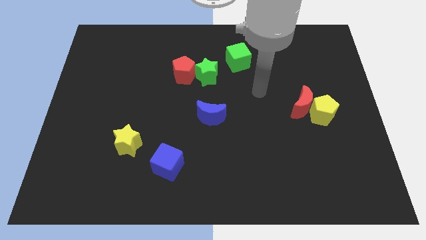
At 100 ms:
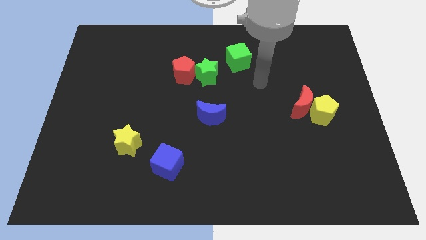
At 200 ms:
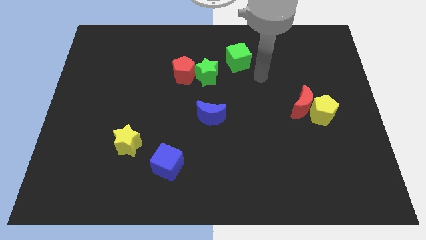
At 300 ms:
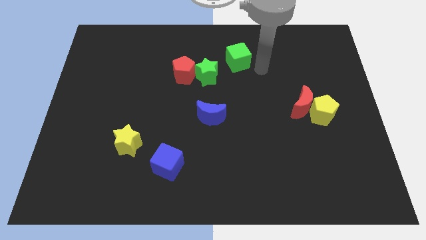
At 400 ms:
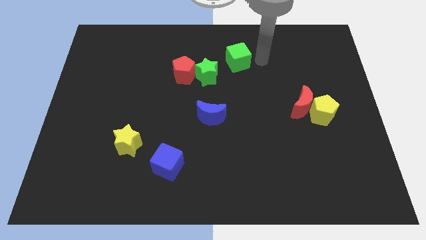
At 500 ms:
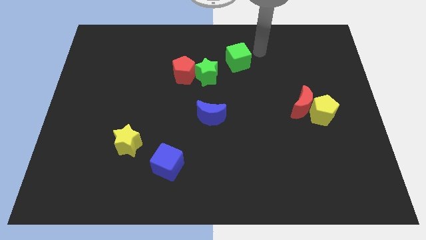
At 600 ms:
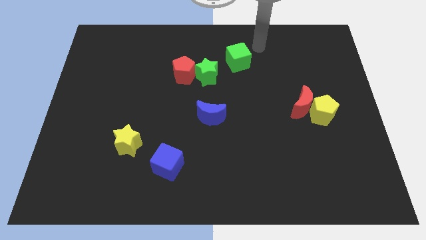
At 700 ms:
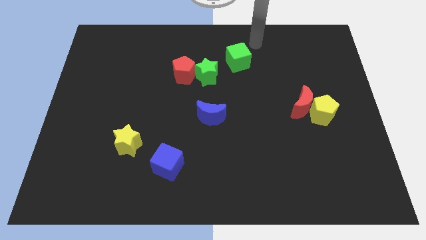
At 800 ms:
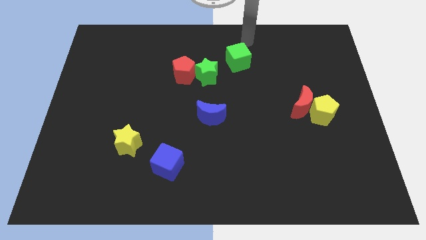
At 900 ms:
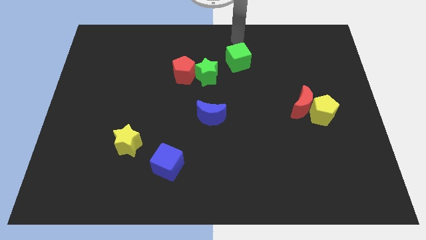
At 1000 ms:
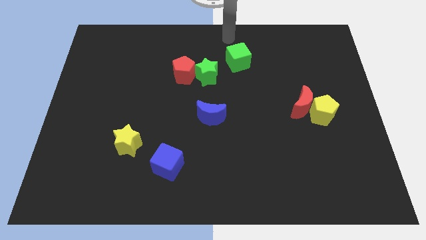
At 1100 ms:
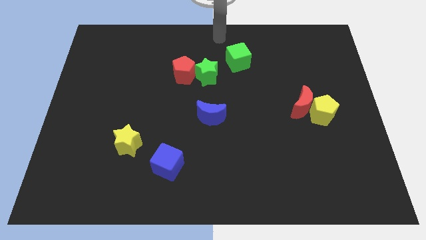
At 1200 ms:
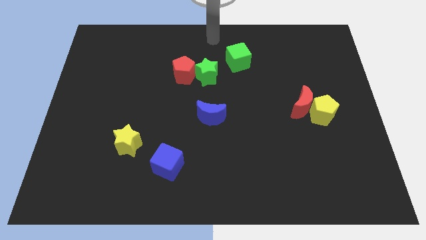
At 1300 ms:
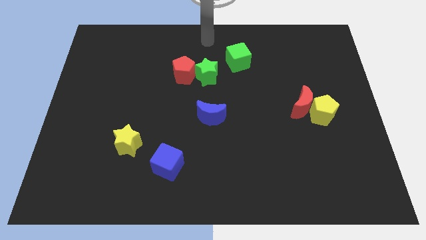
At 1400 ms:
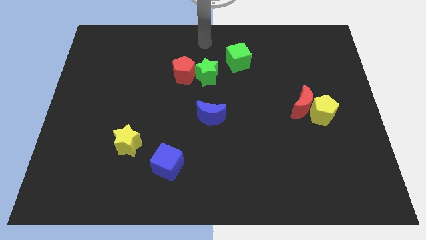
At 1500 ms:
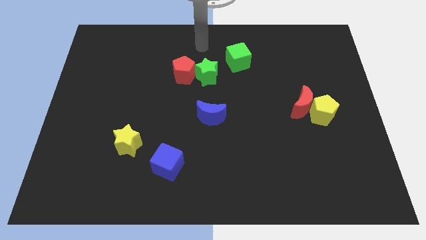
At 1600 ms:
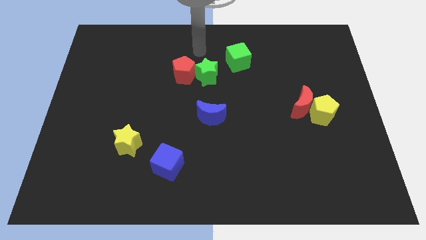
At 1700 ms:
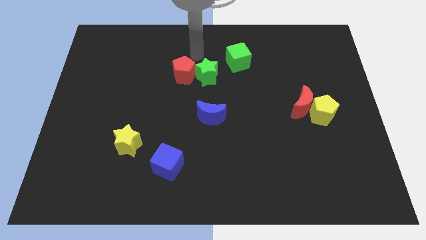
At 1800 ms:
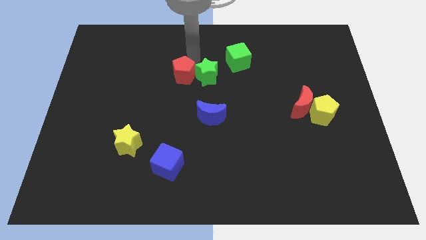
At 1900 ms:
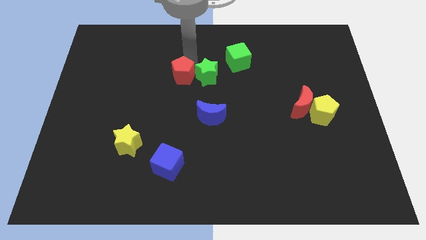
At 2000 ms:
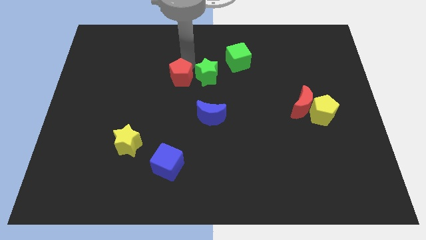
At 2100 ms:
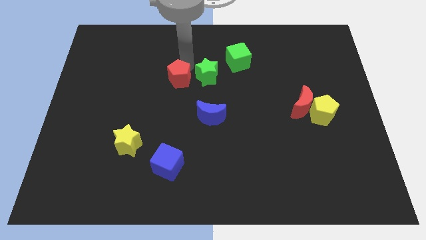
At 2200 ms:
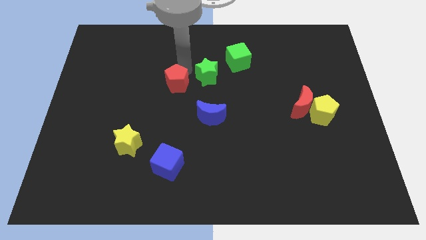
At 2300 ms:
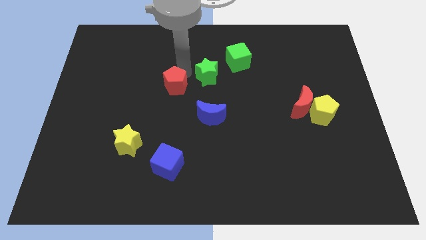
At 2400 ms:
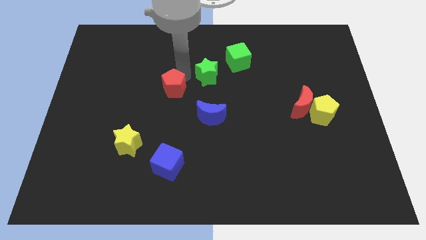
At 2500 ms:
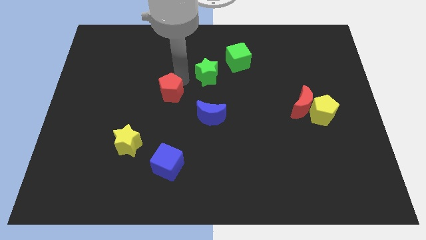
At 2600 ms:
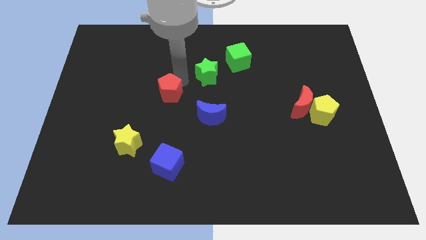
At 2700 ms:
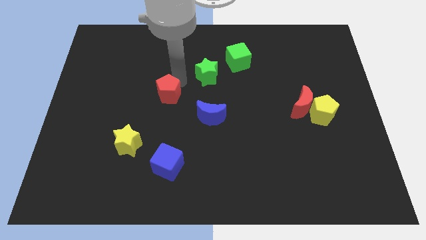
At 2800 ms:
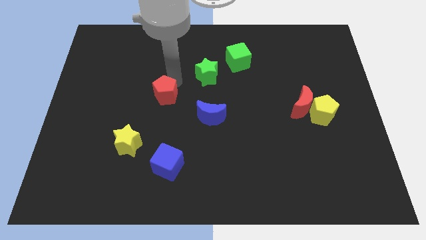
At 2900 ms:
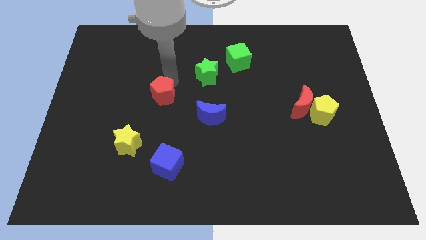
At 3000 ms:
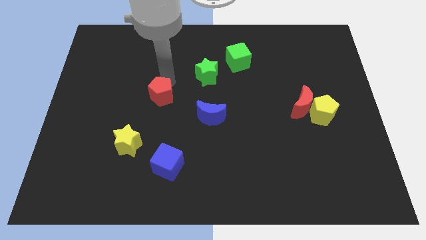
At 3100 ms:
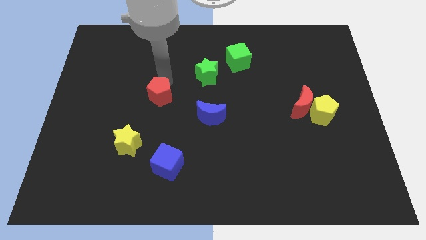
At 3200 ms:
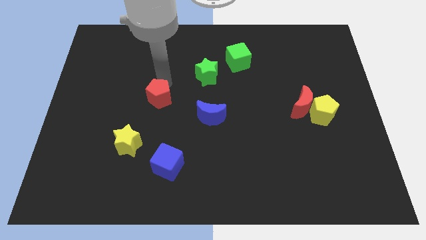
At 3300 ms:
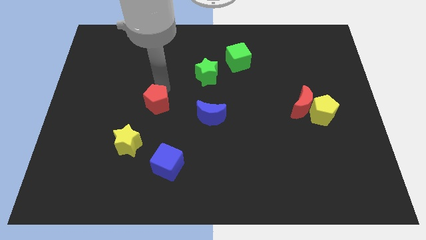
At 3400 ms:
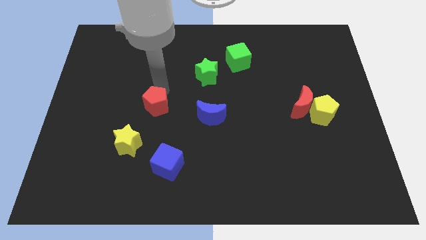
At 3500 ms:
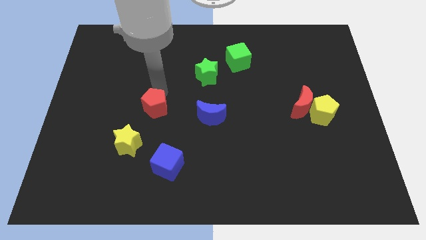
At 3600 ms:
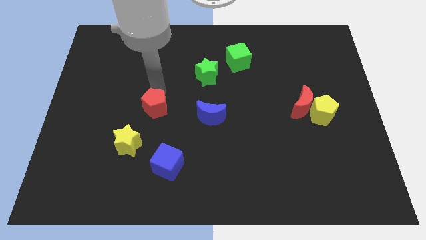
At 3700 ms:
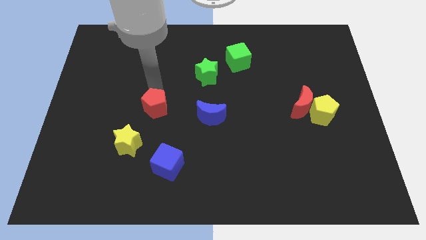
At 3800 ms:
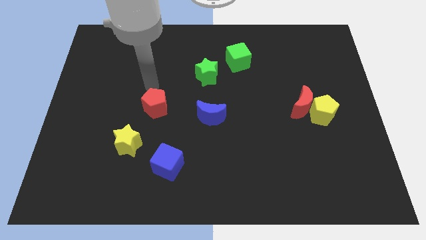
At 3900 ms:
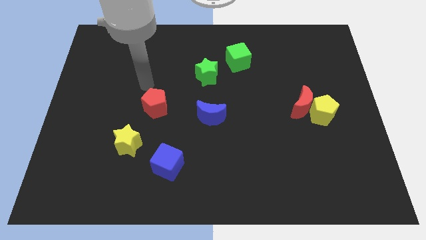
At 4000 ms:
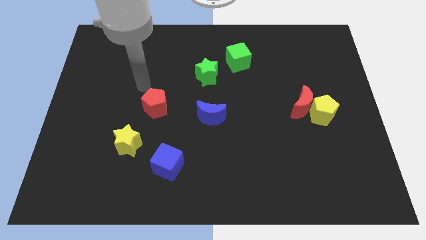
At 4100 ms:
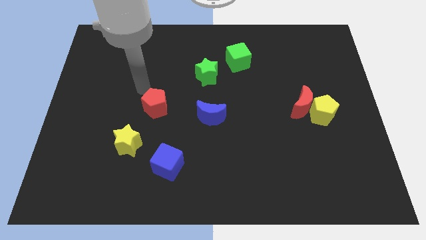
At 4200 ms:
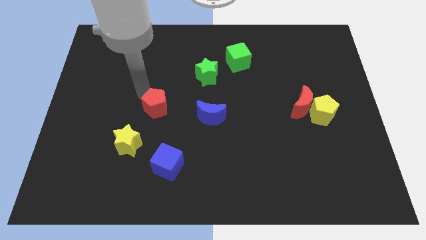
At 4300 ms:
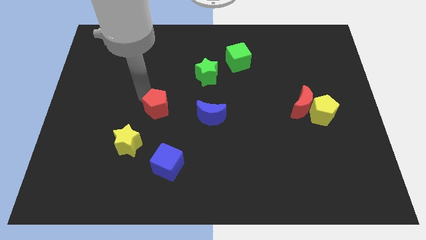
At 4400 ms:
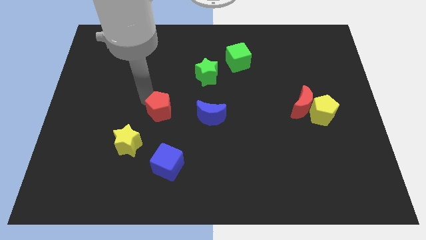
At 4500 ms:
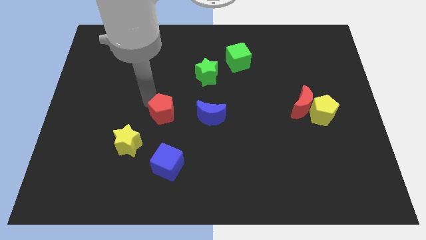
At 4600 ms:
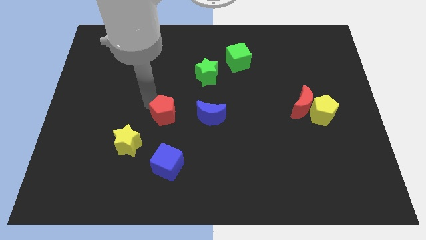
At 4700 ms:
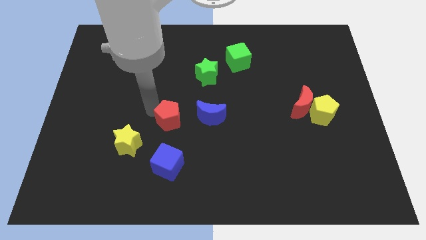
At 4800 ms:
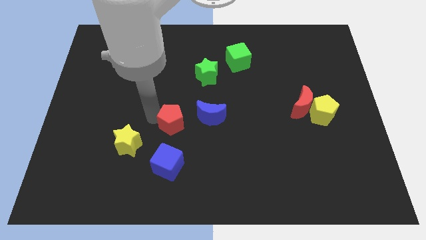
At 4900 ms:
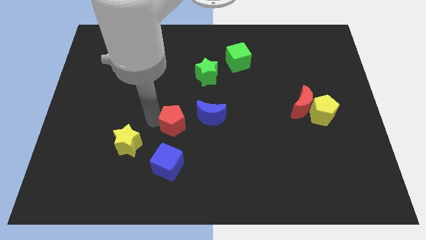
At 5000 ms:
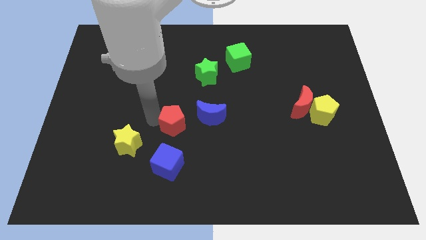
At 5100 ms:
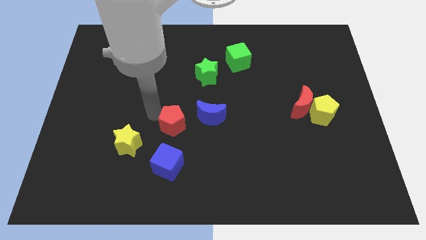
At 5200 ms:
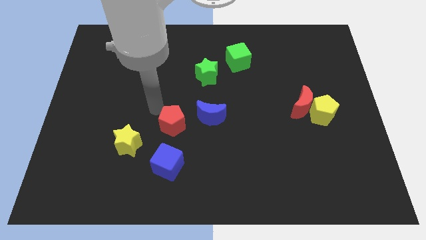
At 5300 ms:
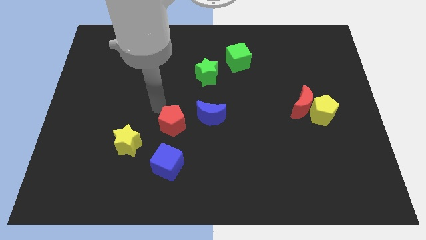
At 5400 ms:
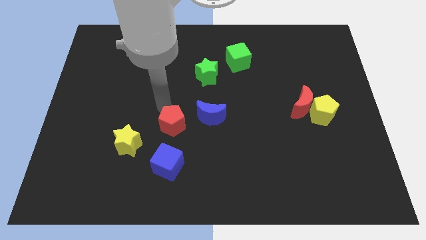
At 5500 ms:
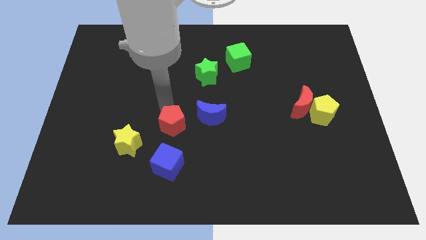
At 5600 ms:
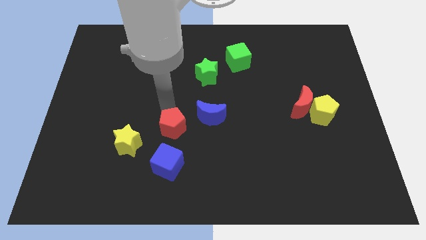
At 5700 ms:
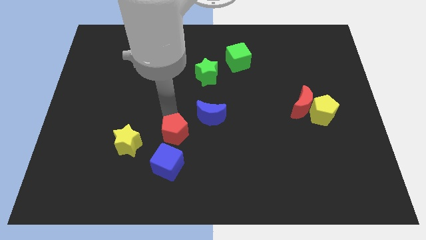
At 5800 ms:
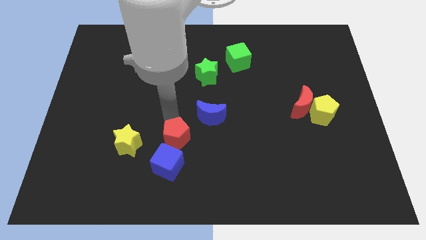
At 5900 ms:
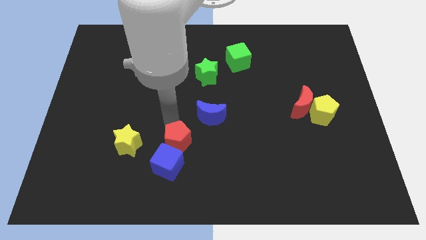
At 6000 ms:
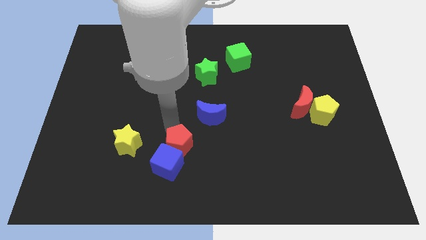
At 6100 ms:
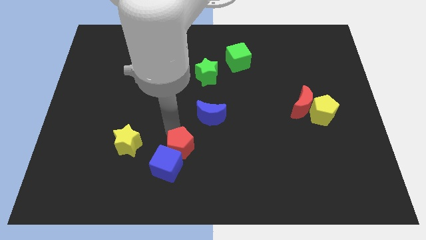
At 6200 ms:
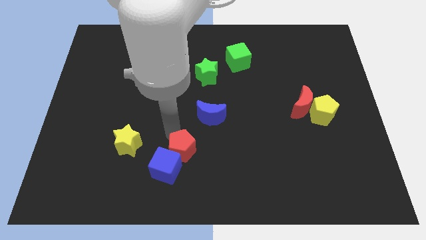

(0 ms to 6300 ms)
move the red pentagon close to the blue cube

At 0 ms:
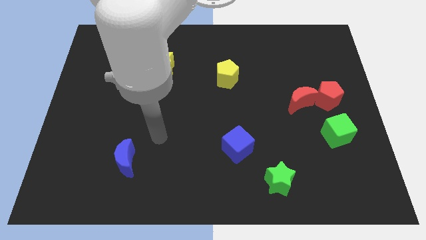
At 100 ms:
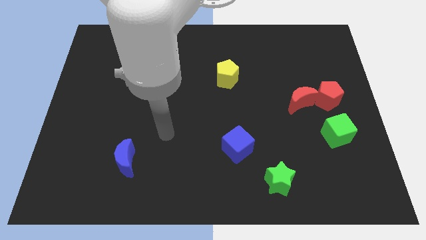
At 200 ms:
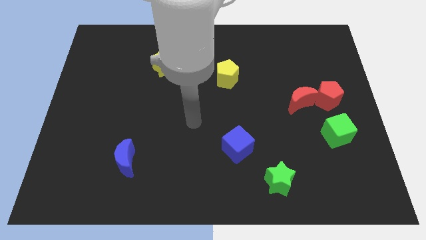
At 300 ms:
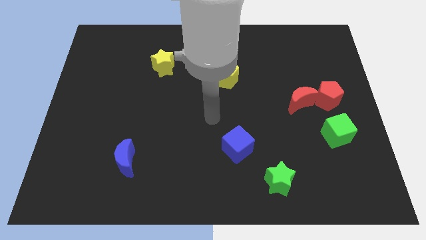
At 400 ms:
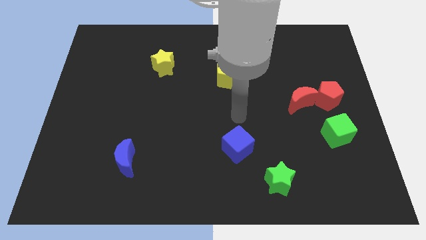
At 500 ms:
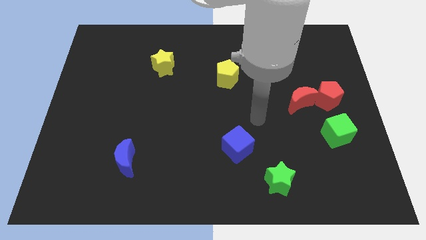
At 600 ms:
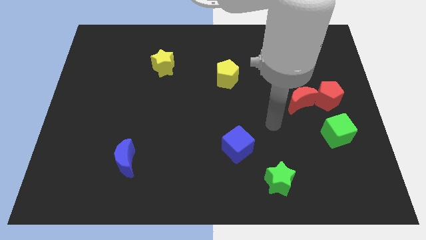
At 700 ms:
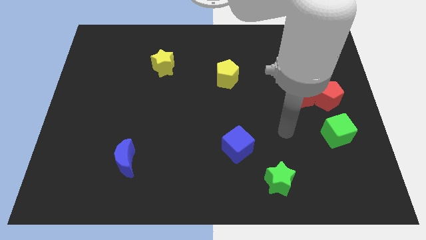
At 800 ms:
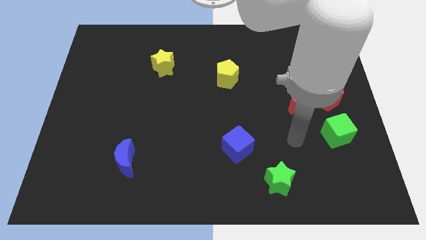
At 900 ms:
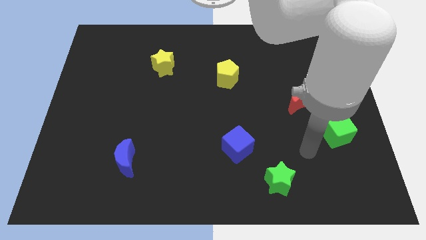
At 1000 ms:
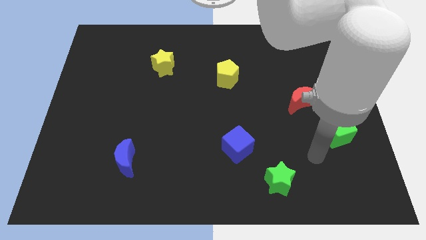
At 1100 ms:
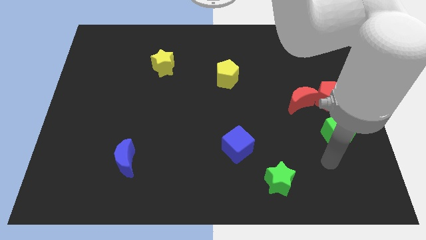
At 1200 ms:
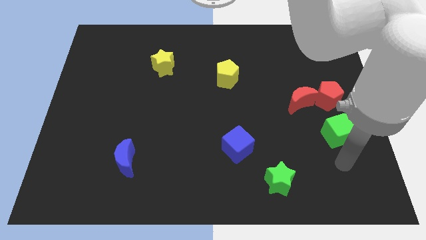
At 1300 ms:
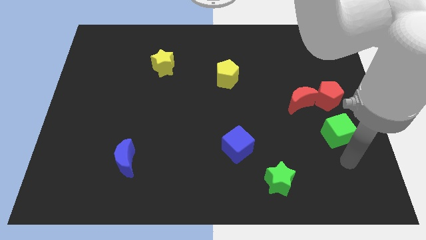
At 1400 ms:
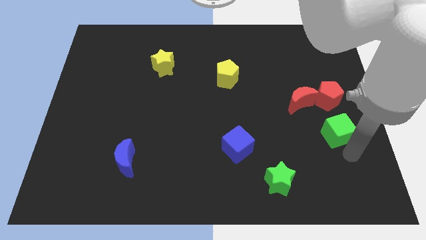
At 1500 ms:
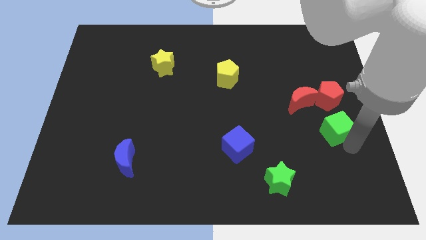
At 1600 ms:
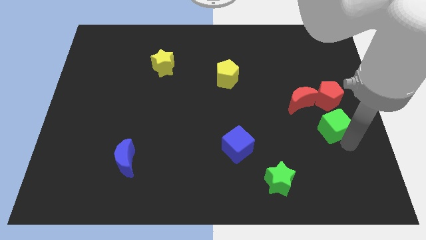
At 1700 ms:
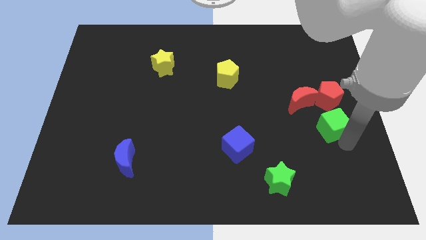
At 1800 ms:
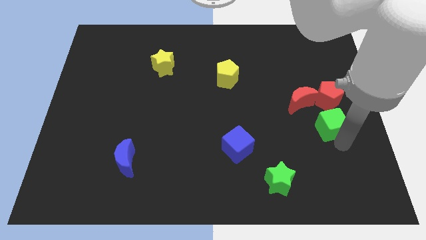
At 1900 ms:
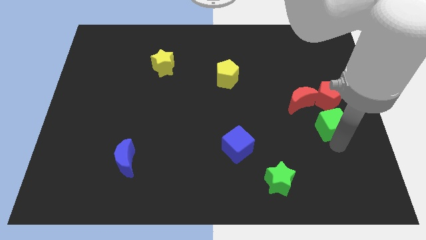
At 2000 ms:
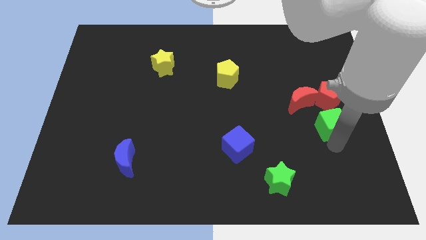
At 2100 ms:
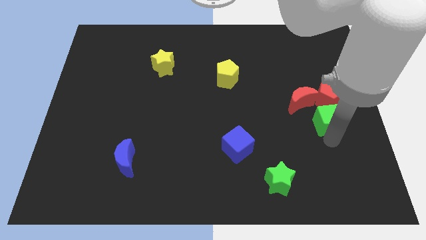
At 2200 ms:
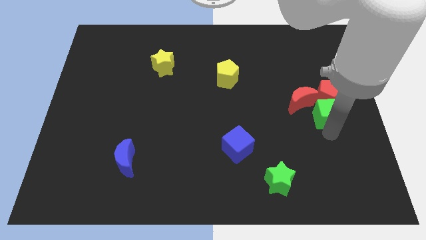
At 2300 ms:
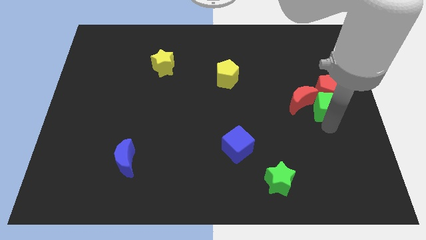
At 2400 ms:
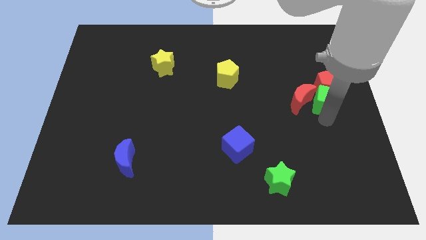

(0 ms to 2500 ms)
put the green cube next to the red pentagon
